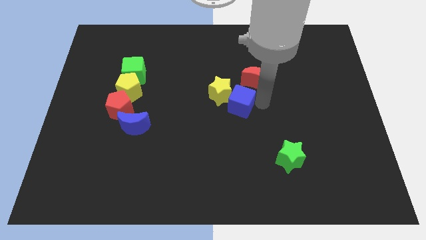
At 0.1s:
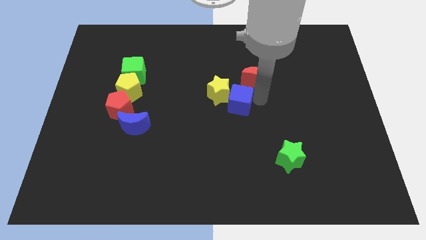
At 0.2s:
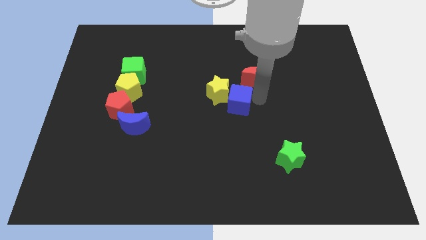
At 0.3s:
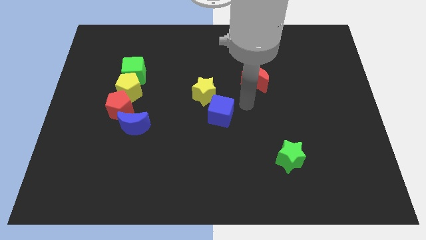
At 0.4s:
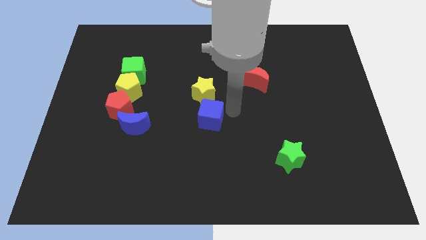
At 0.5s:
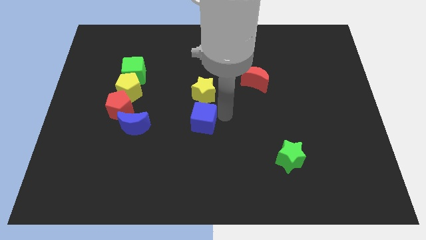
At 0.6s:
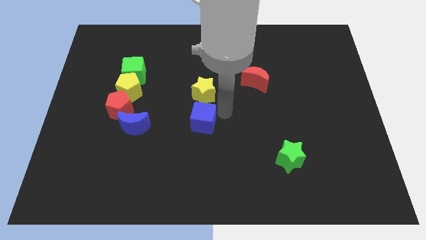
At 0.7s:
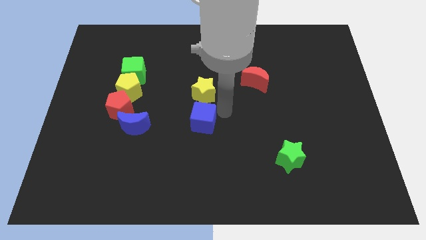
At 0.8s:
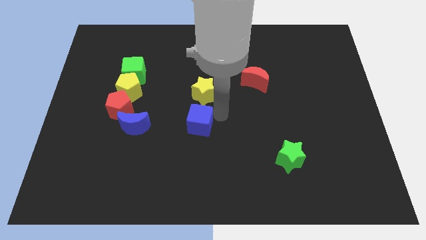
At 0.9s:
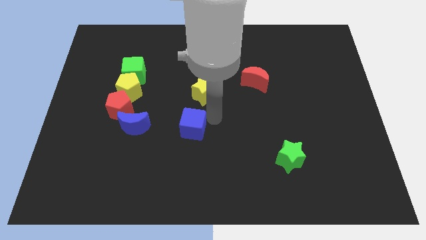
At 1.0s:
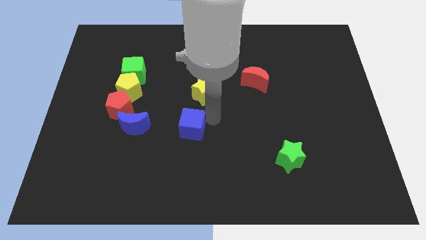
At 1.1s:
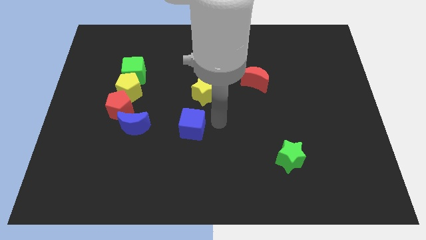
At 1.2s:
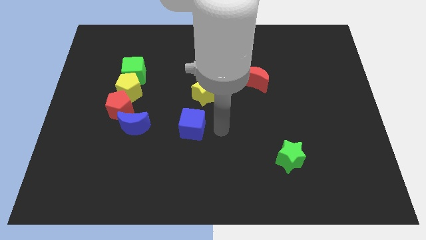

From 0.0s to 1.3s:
separate the yellow star and the blue cube

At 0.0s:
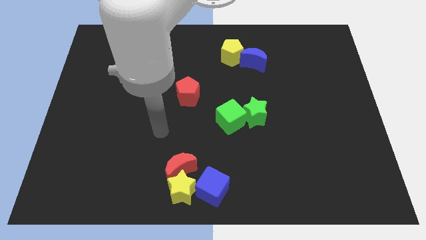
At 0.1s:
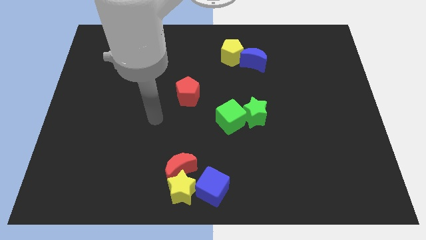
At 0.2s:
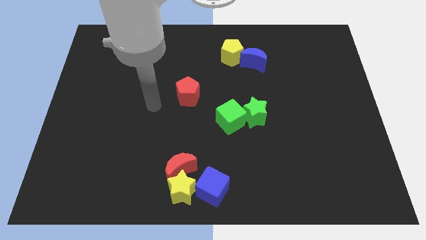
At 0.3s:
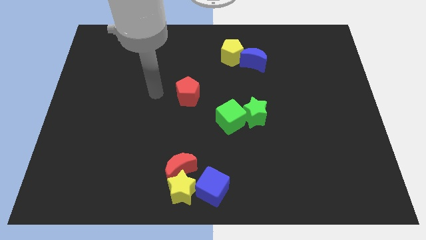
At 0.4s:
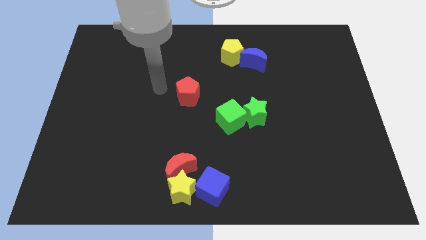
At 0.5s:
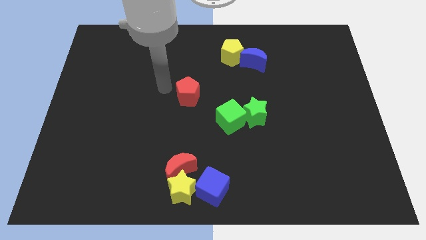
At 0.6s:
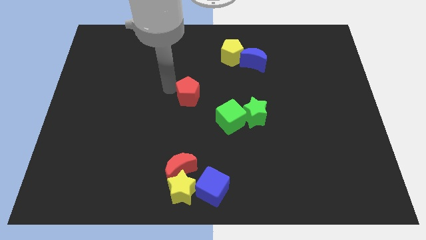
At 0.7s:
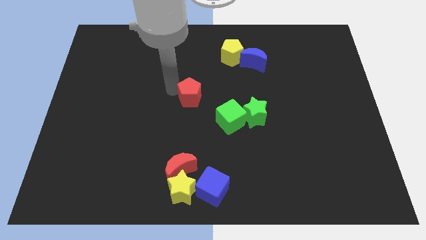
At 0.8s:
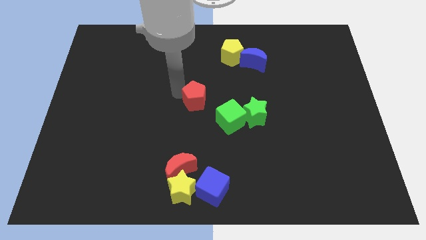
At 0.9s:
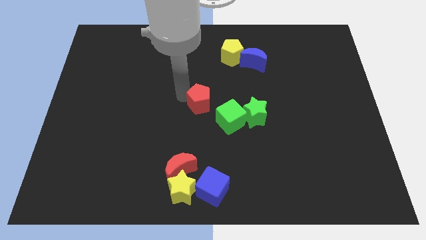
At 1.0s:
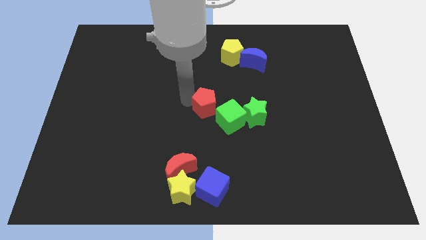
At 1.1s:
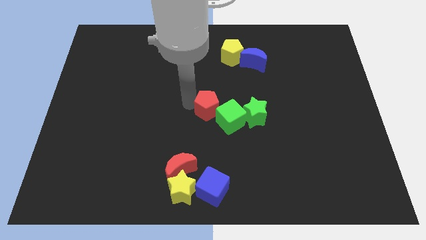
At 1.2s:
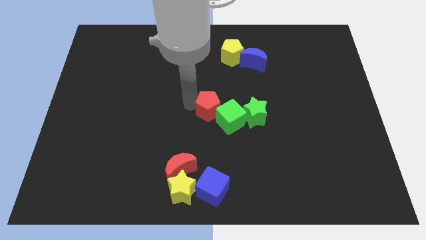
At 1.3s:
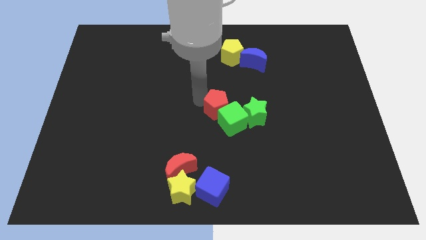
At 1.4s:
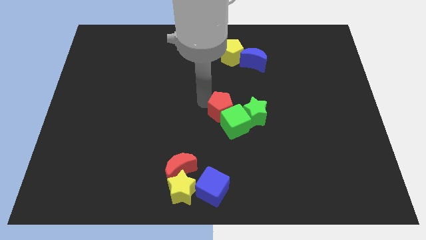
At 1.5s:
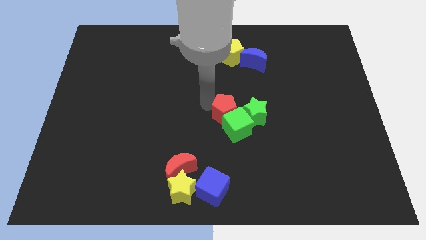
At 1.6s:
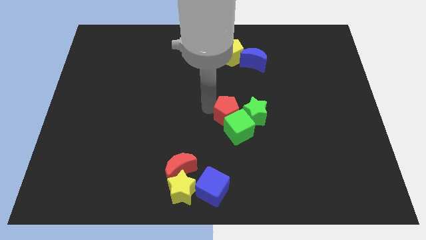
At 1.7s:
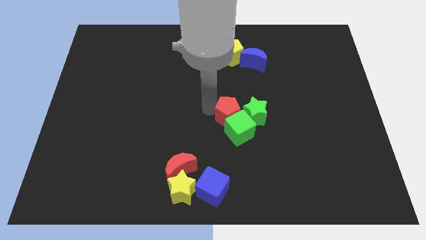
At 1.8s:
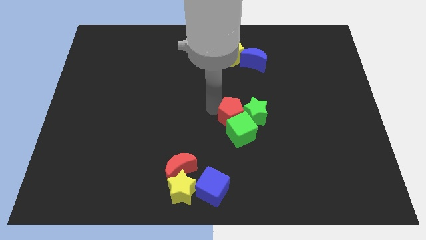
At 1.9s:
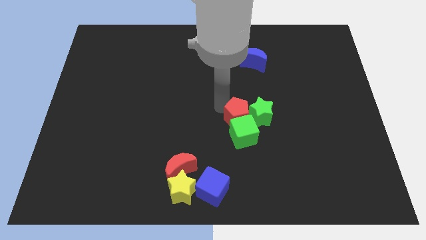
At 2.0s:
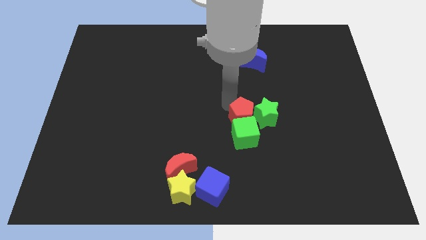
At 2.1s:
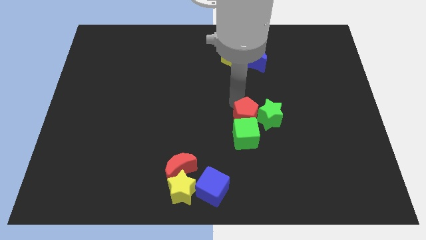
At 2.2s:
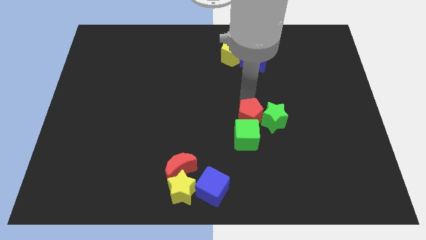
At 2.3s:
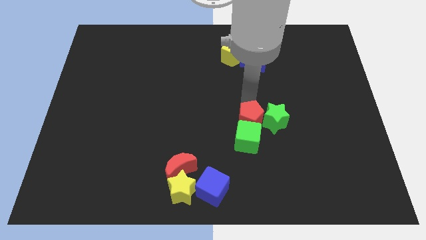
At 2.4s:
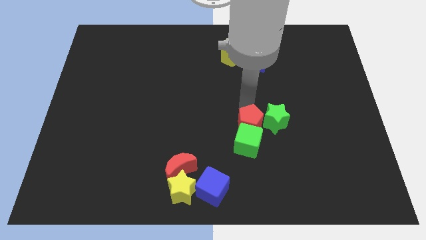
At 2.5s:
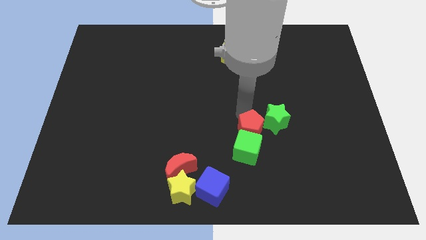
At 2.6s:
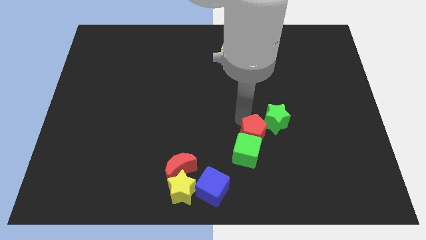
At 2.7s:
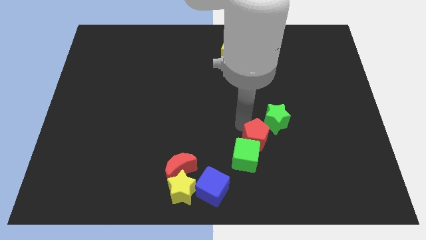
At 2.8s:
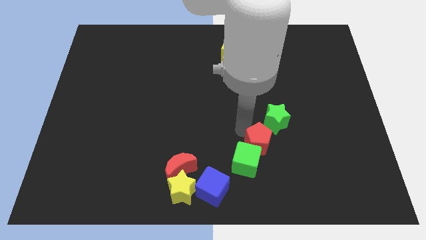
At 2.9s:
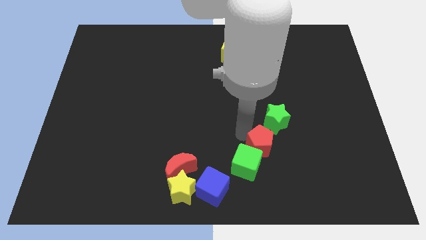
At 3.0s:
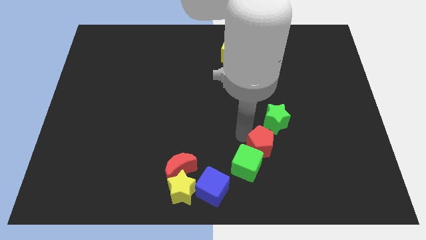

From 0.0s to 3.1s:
move the red pentagon with green cube and push towards blue cube

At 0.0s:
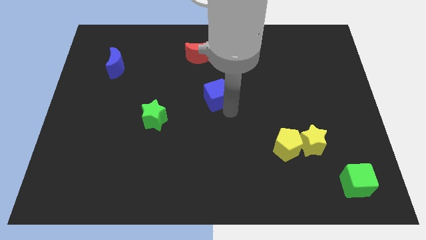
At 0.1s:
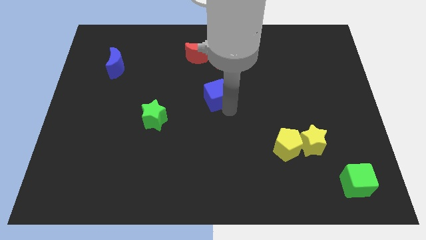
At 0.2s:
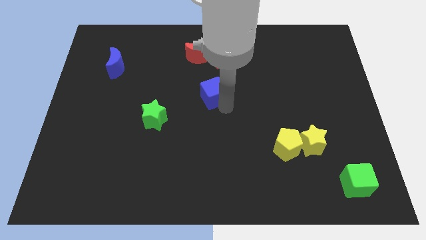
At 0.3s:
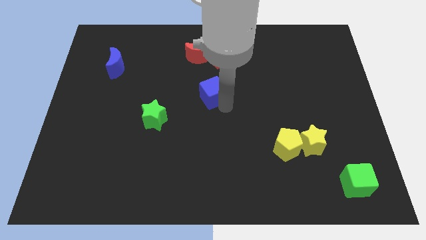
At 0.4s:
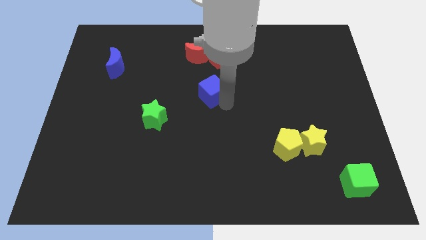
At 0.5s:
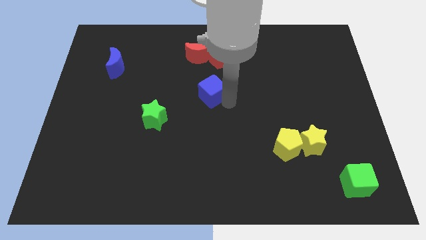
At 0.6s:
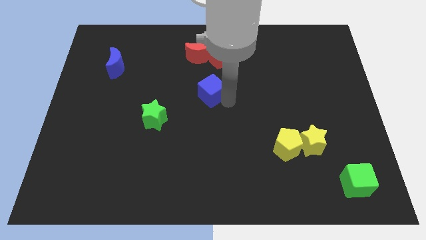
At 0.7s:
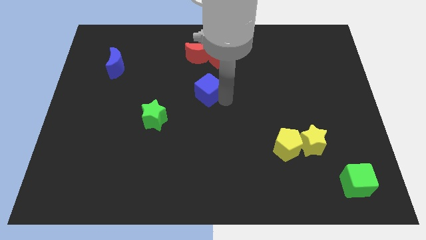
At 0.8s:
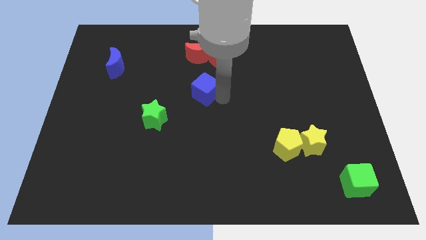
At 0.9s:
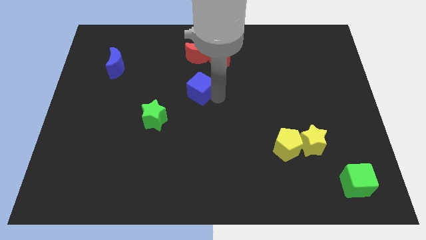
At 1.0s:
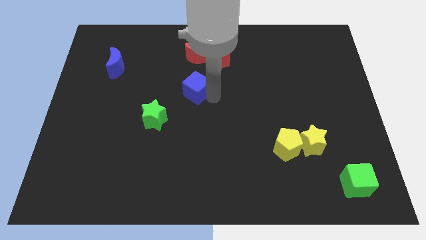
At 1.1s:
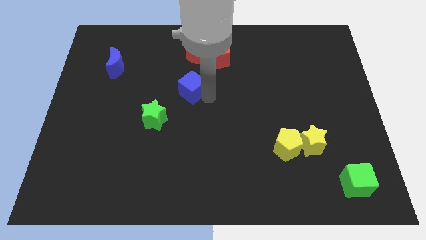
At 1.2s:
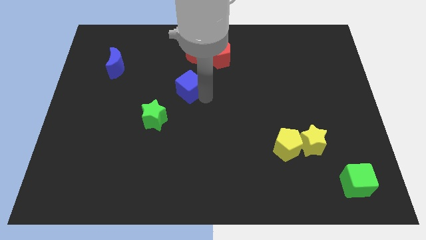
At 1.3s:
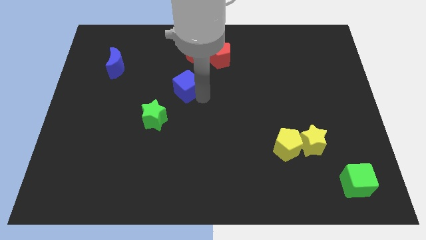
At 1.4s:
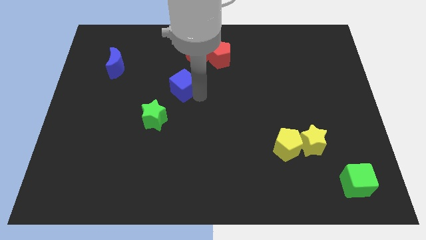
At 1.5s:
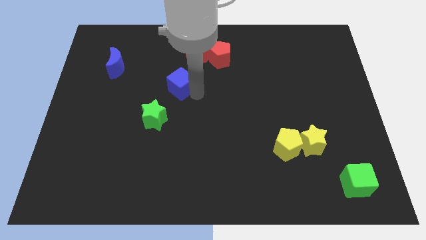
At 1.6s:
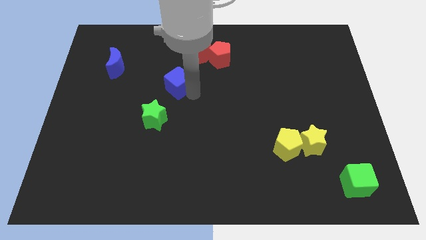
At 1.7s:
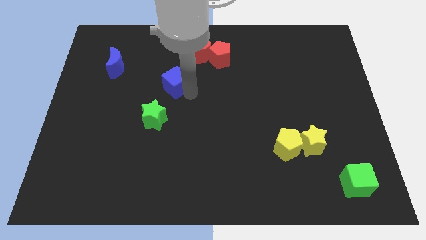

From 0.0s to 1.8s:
drag the blue cube diagonally in between the red crescent and yellow star

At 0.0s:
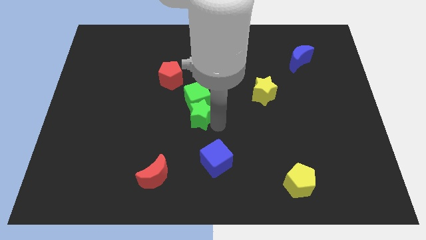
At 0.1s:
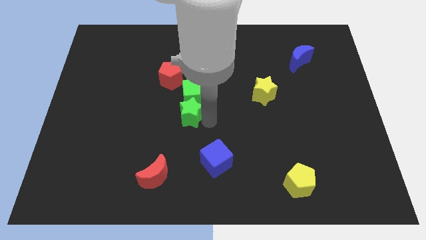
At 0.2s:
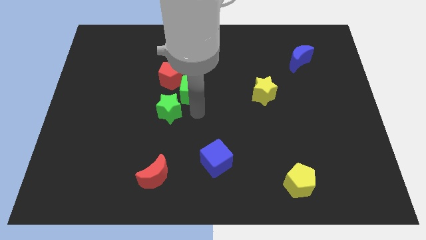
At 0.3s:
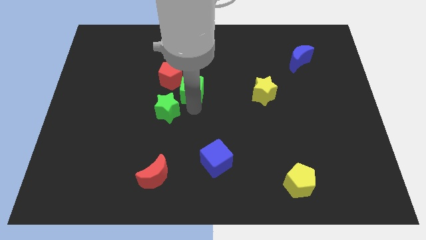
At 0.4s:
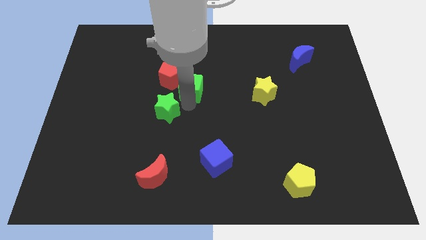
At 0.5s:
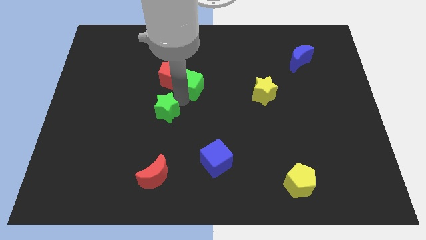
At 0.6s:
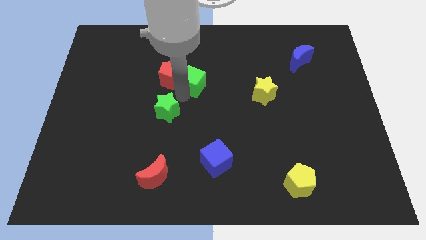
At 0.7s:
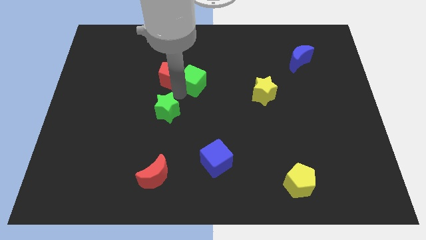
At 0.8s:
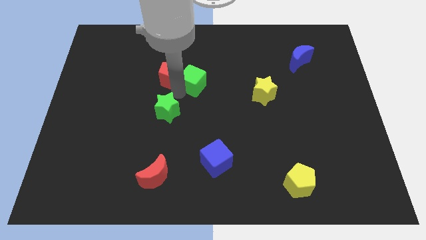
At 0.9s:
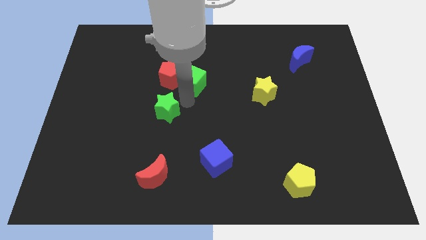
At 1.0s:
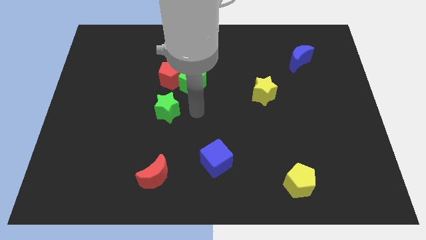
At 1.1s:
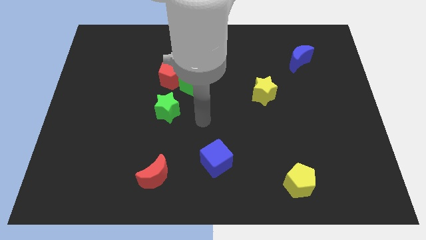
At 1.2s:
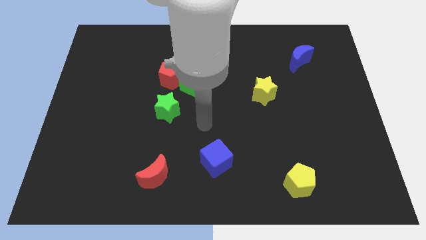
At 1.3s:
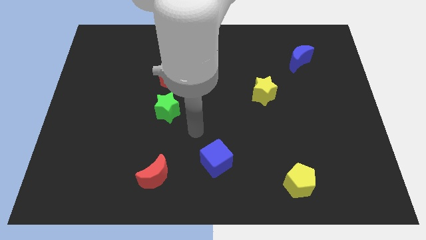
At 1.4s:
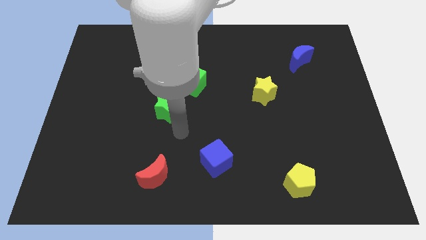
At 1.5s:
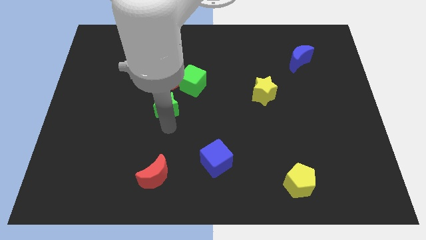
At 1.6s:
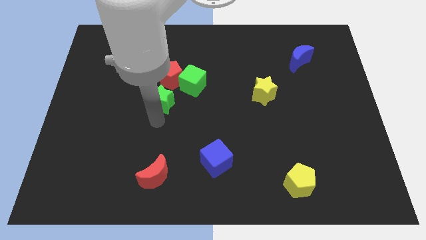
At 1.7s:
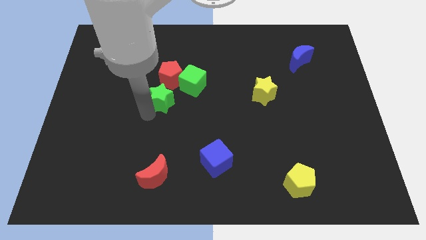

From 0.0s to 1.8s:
separate the green star from the green cube

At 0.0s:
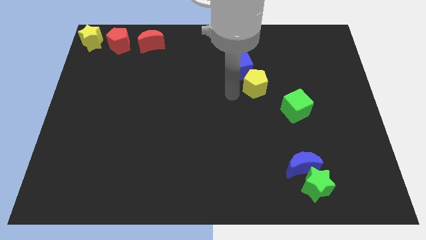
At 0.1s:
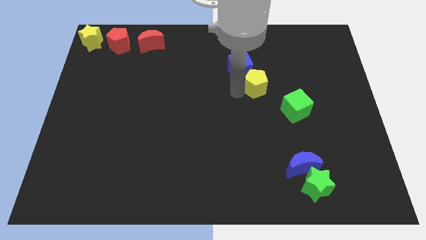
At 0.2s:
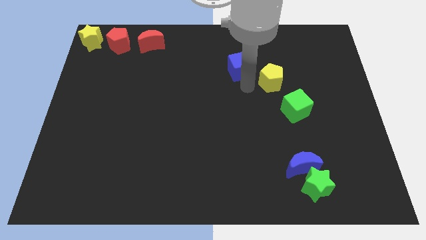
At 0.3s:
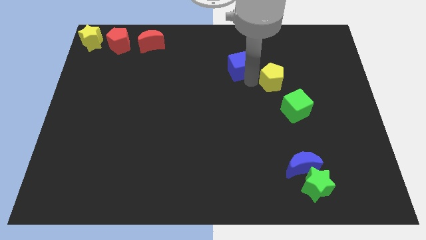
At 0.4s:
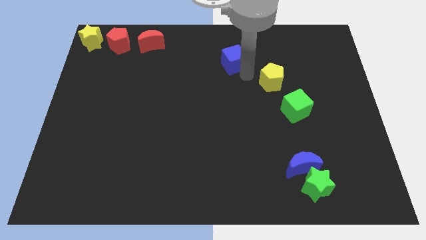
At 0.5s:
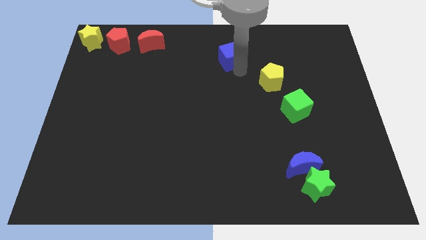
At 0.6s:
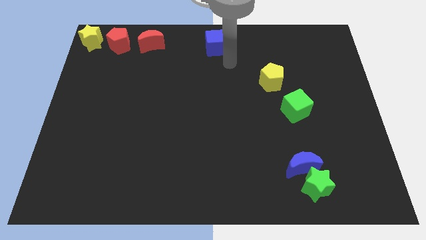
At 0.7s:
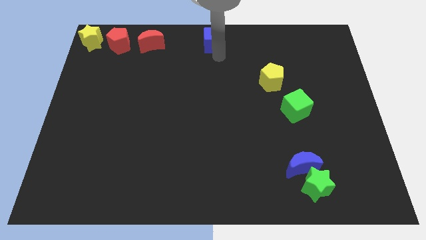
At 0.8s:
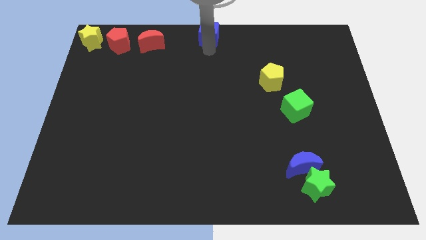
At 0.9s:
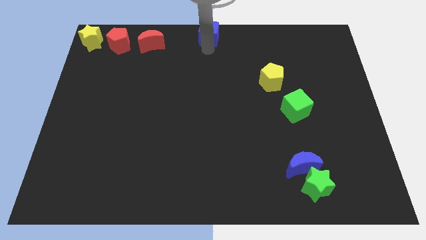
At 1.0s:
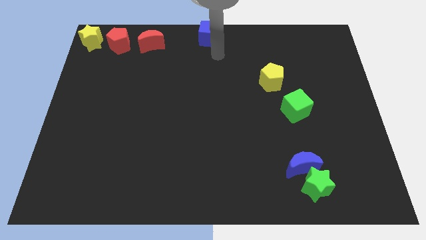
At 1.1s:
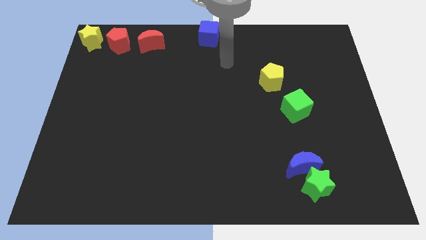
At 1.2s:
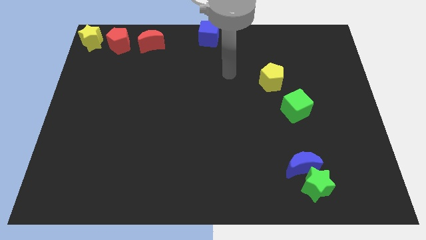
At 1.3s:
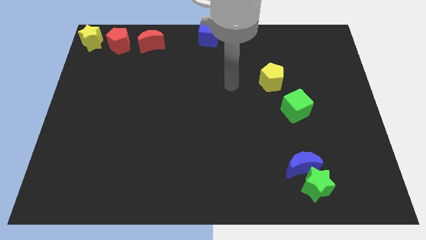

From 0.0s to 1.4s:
push the blue cube to the top center of the board
